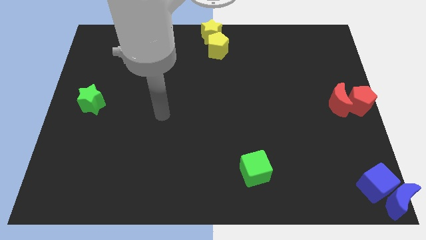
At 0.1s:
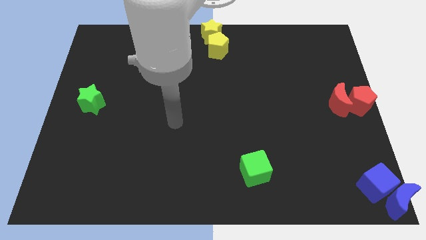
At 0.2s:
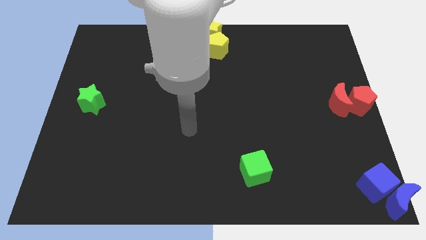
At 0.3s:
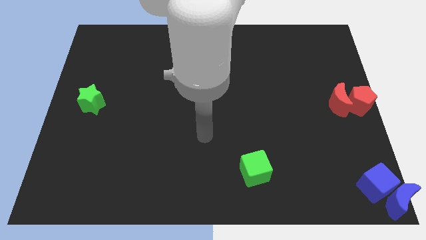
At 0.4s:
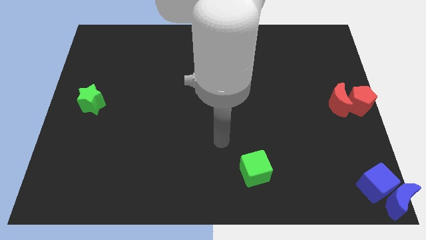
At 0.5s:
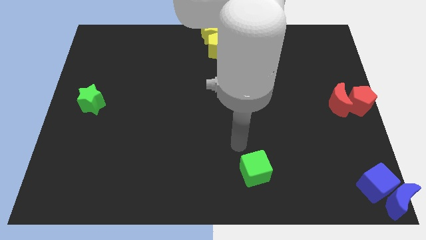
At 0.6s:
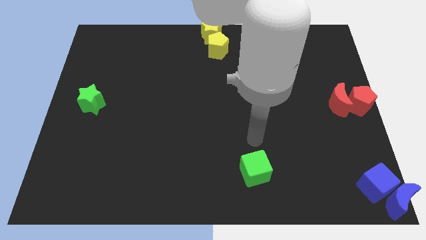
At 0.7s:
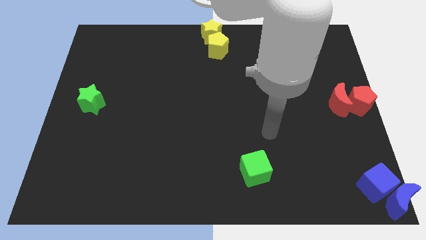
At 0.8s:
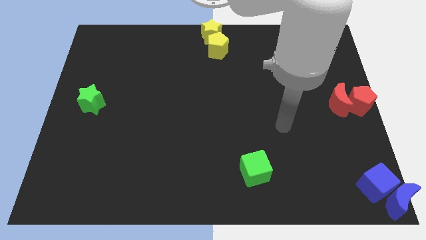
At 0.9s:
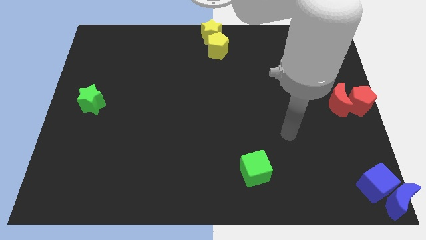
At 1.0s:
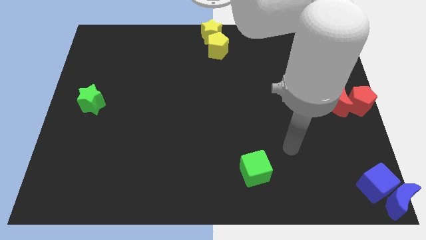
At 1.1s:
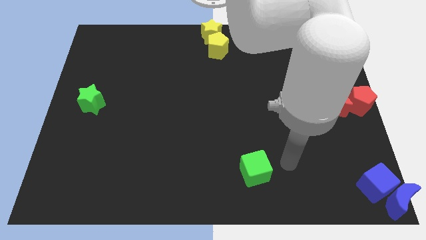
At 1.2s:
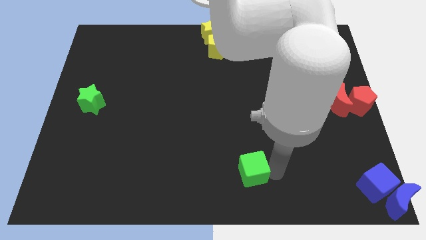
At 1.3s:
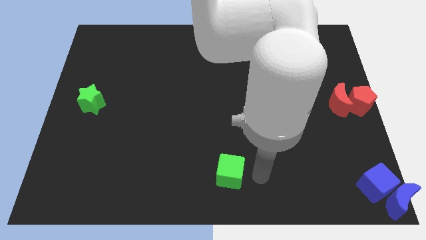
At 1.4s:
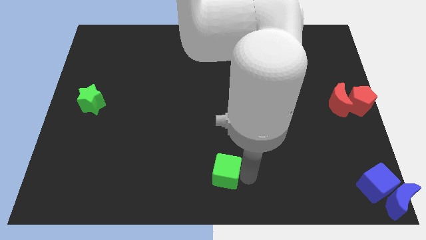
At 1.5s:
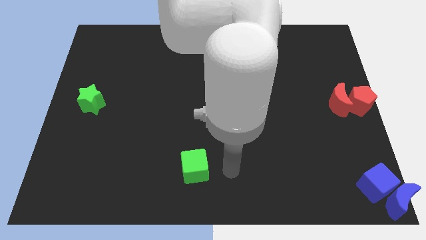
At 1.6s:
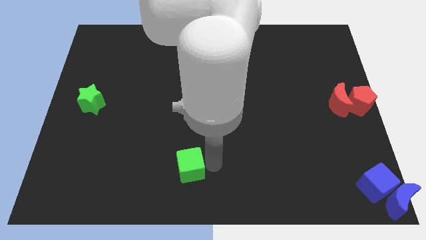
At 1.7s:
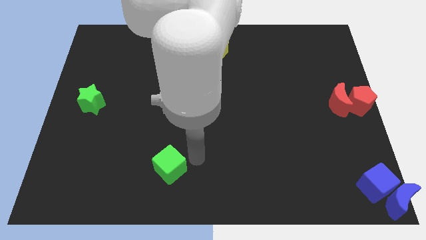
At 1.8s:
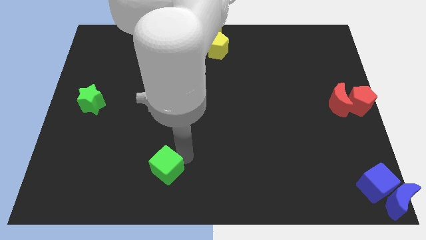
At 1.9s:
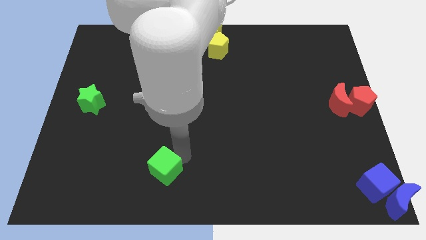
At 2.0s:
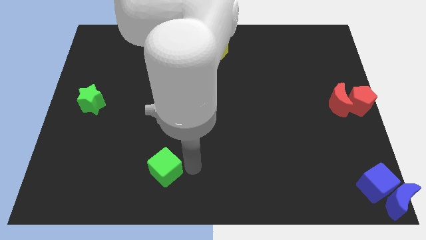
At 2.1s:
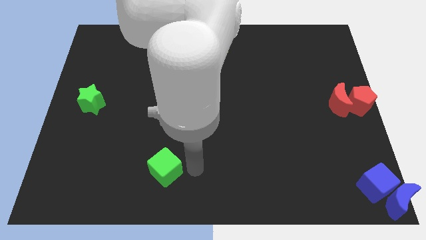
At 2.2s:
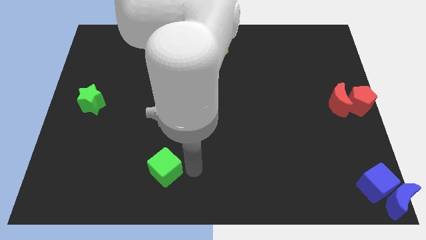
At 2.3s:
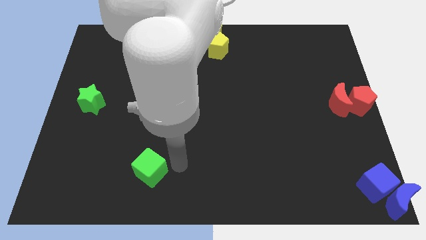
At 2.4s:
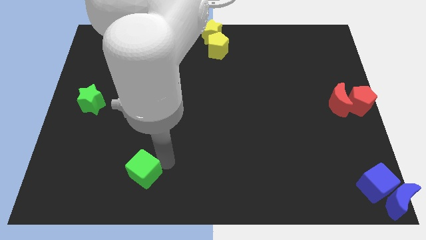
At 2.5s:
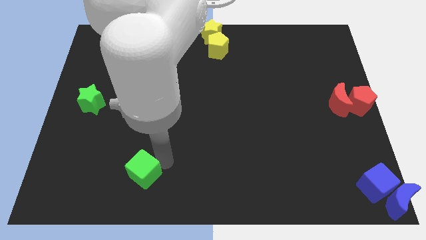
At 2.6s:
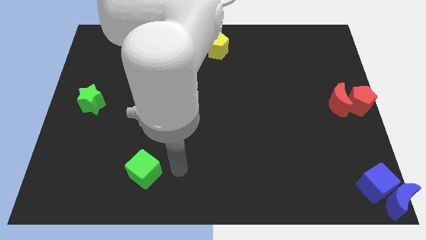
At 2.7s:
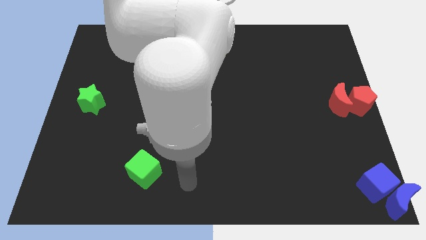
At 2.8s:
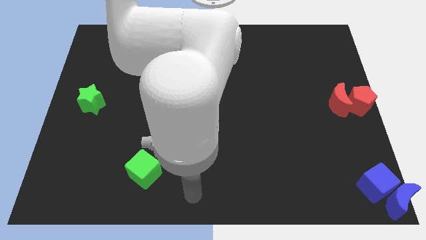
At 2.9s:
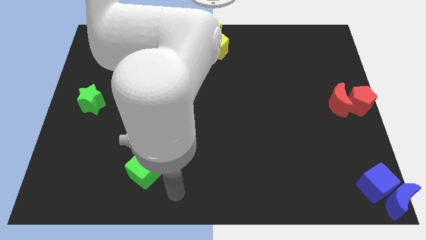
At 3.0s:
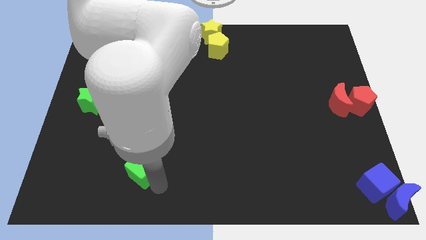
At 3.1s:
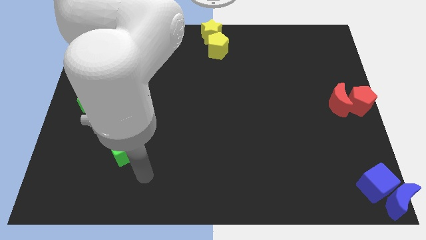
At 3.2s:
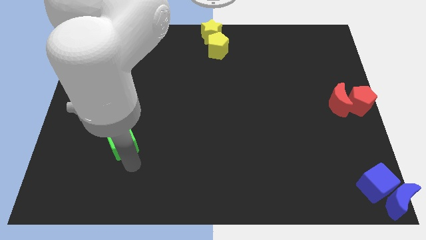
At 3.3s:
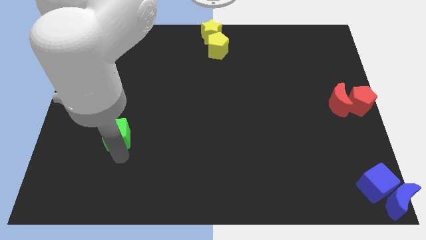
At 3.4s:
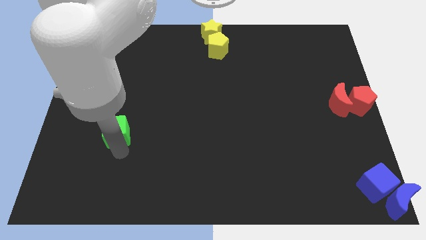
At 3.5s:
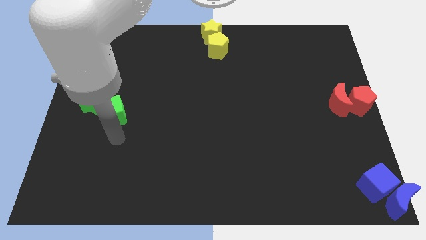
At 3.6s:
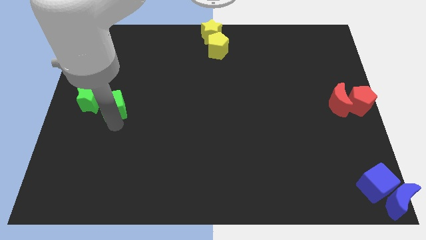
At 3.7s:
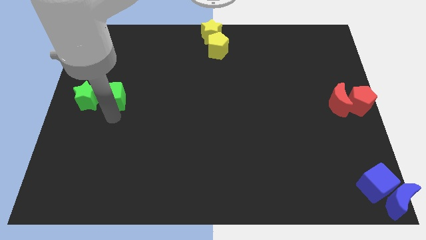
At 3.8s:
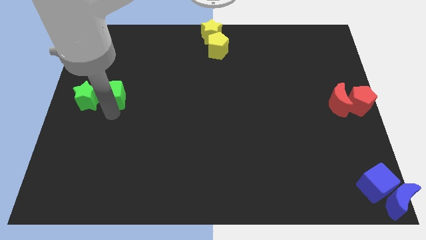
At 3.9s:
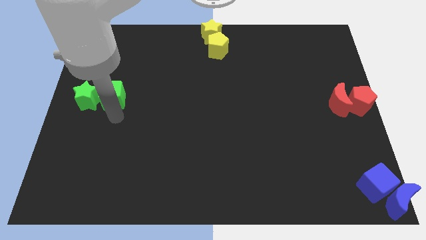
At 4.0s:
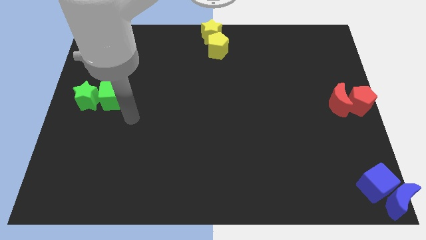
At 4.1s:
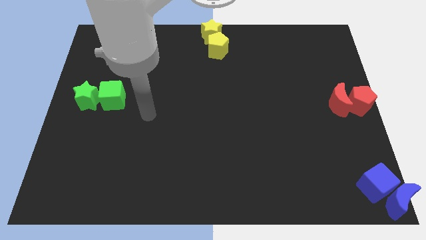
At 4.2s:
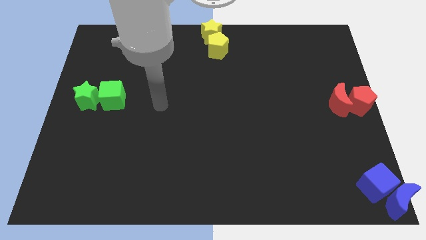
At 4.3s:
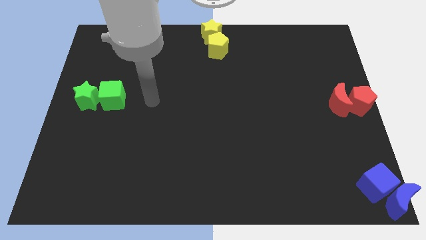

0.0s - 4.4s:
move the green cube to the right side of the green star

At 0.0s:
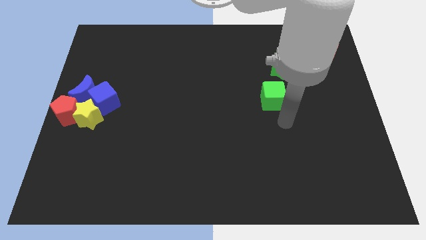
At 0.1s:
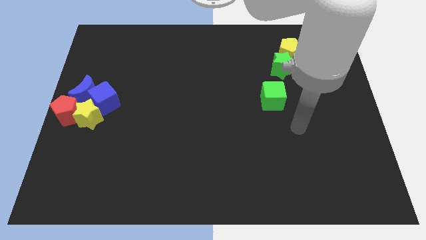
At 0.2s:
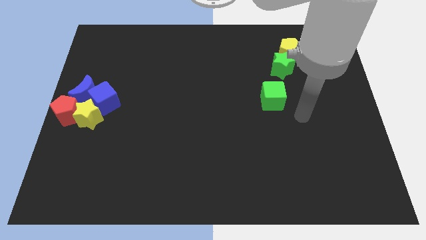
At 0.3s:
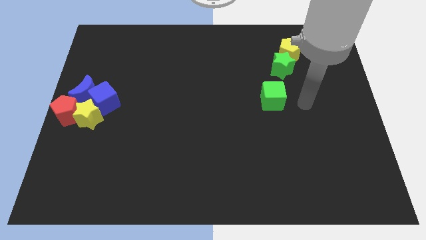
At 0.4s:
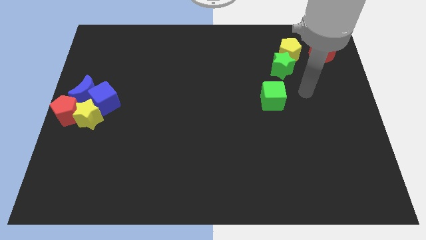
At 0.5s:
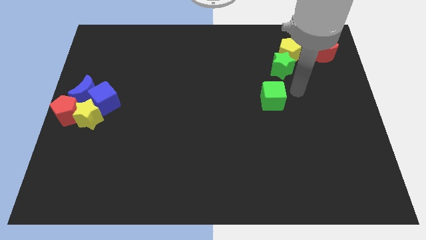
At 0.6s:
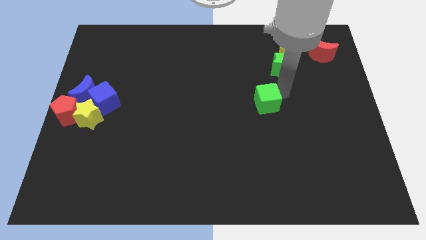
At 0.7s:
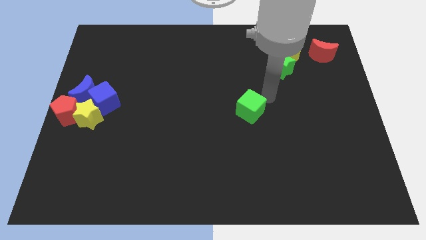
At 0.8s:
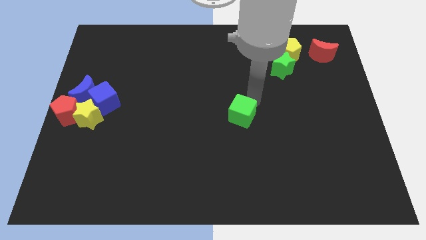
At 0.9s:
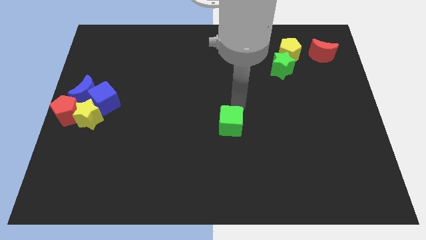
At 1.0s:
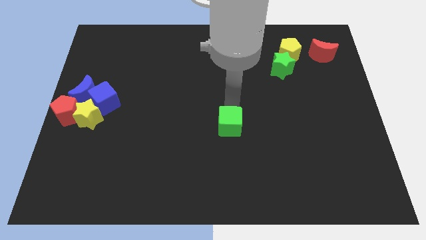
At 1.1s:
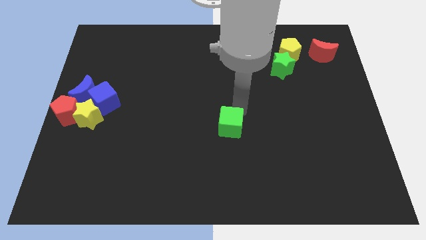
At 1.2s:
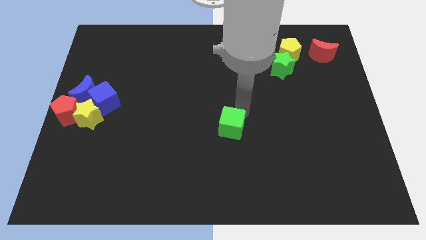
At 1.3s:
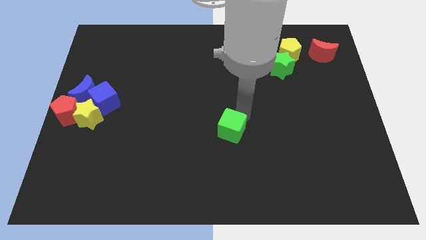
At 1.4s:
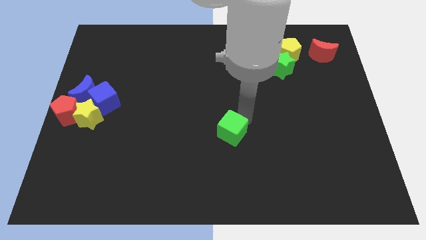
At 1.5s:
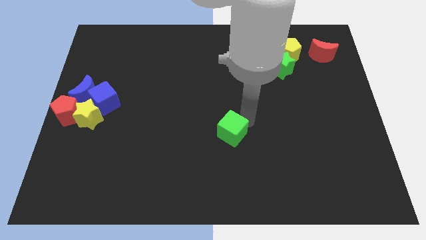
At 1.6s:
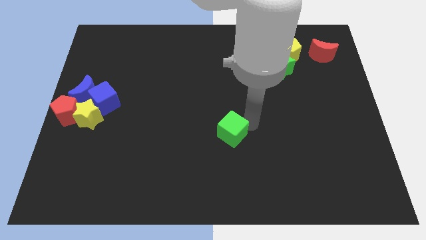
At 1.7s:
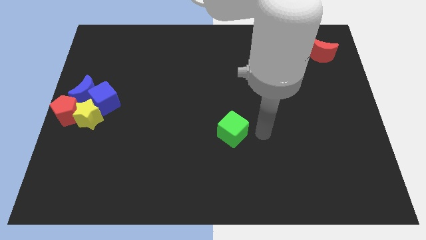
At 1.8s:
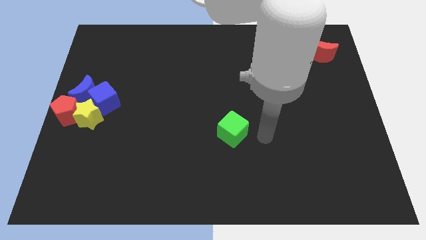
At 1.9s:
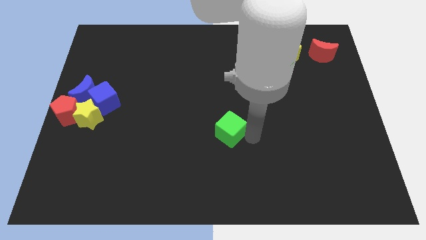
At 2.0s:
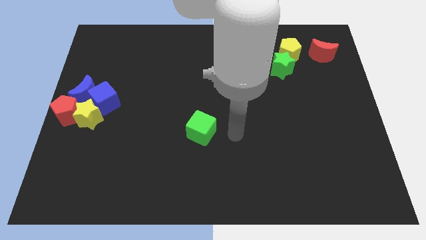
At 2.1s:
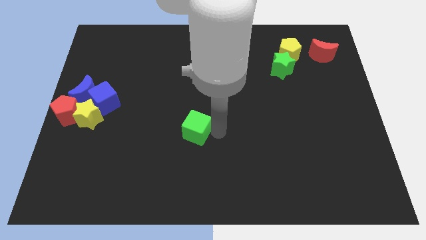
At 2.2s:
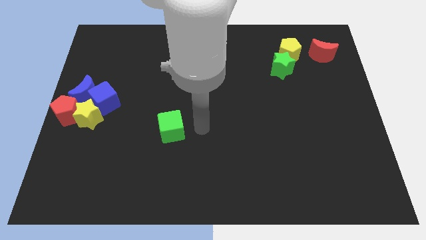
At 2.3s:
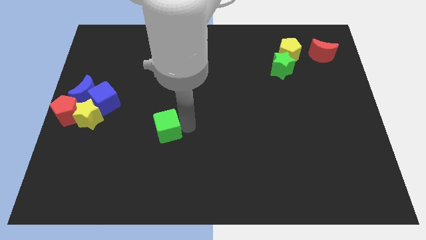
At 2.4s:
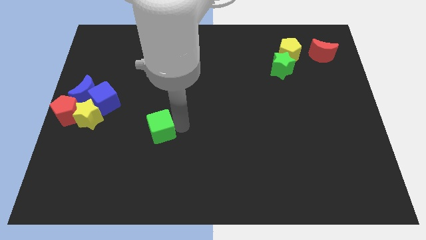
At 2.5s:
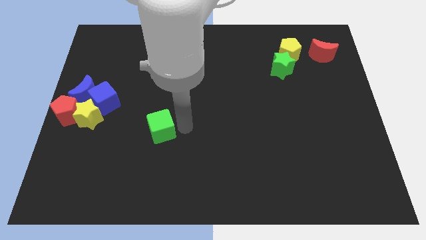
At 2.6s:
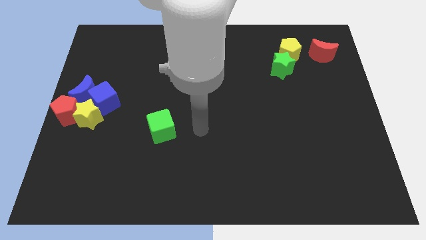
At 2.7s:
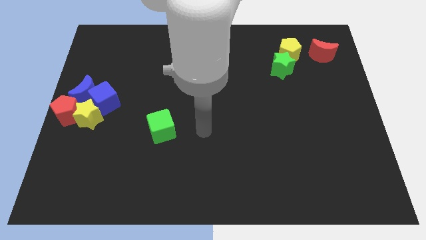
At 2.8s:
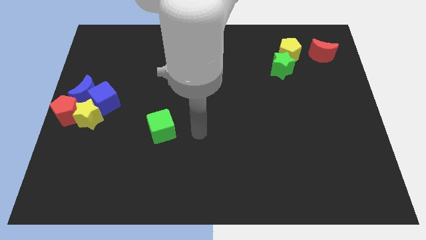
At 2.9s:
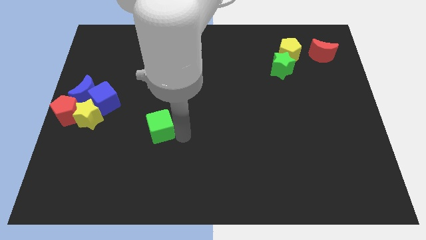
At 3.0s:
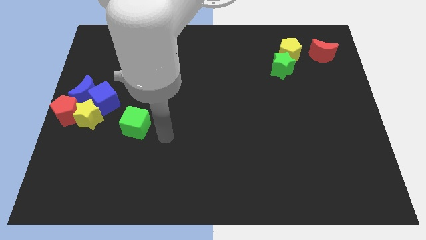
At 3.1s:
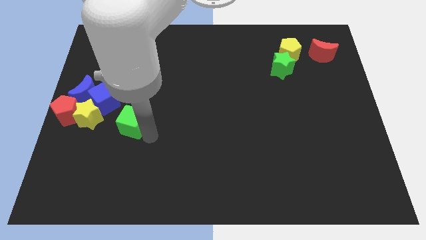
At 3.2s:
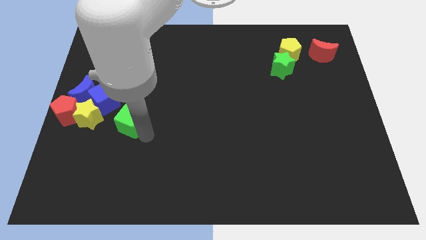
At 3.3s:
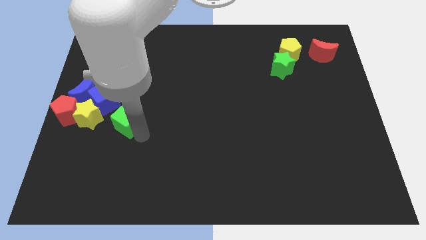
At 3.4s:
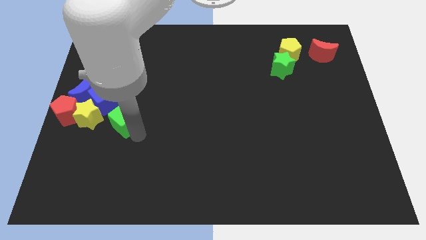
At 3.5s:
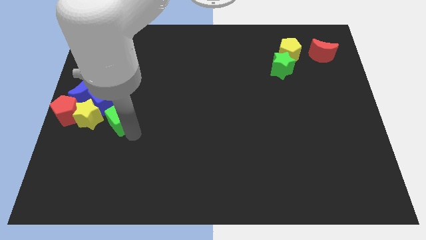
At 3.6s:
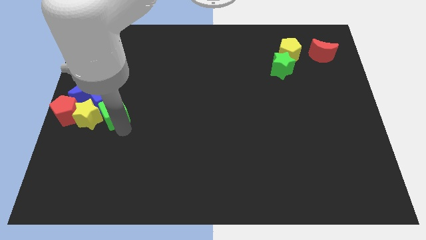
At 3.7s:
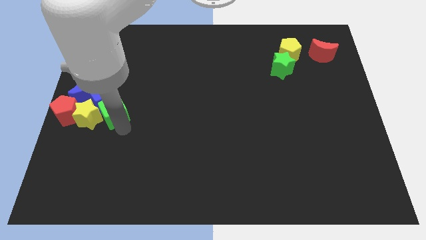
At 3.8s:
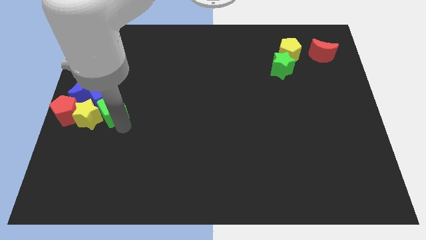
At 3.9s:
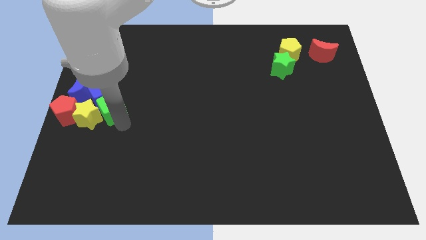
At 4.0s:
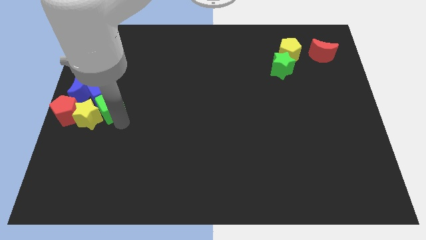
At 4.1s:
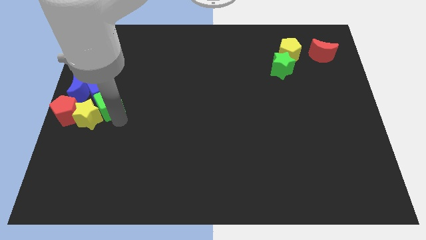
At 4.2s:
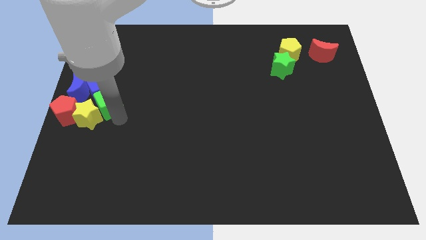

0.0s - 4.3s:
drag the green cube into the group of blocks

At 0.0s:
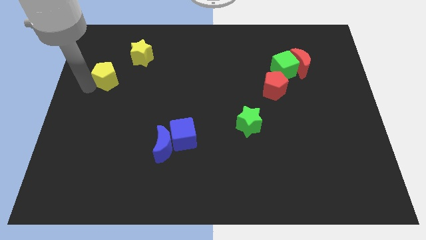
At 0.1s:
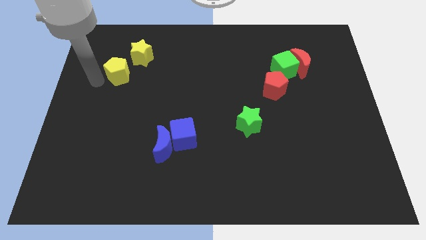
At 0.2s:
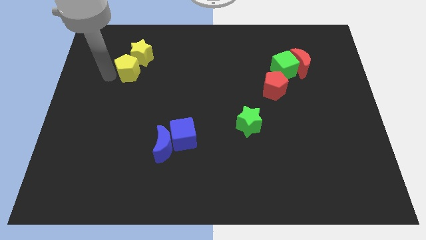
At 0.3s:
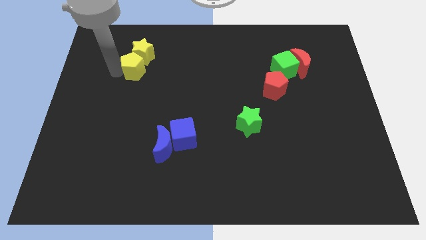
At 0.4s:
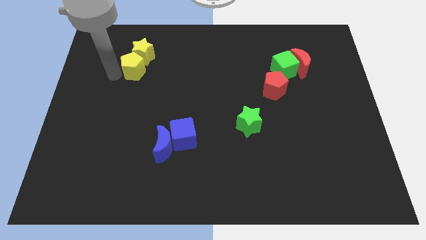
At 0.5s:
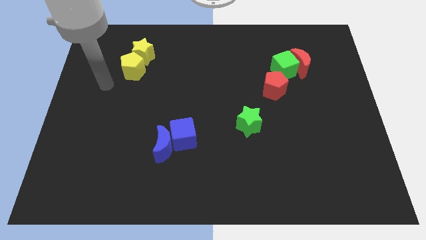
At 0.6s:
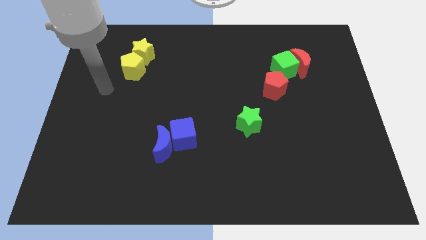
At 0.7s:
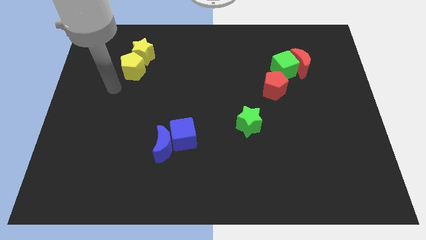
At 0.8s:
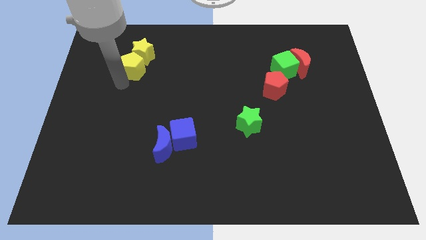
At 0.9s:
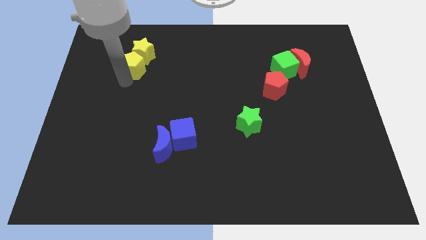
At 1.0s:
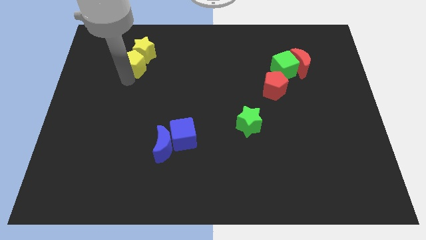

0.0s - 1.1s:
move yellow pentagon into the yellow star
